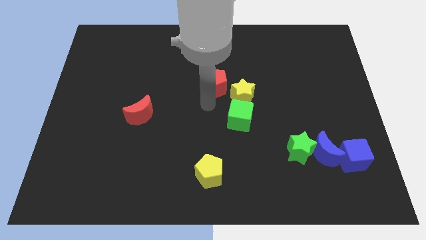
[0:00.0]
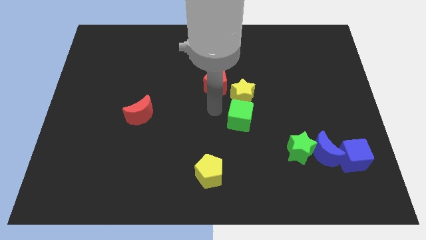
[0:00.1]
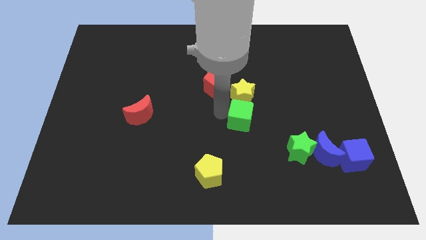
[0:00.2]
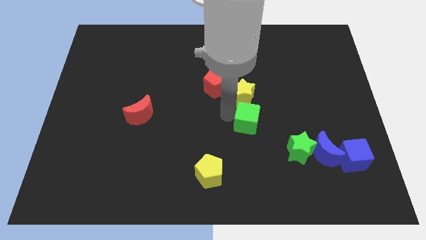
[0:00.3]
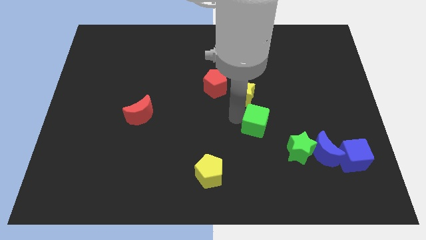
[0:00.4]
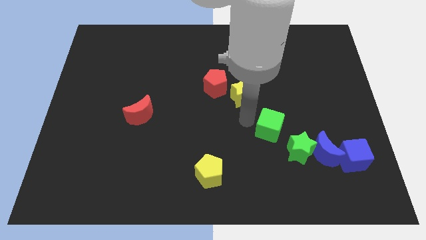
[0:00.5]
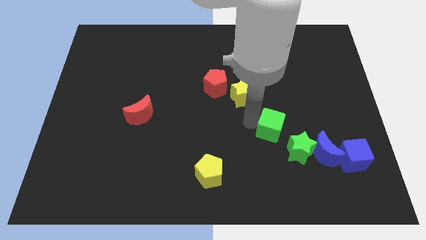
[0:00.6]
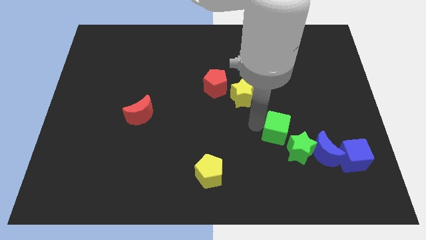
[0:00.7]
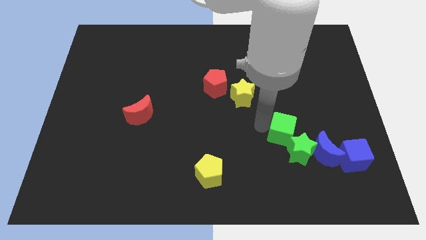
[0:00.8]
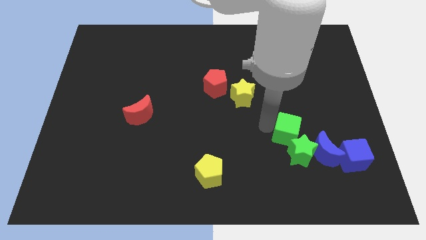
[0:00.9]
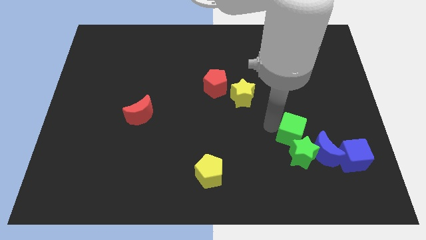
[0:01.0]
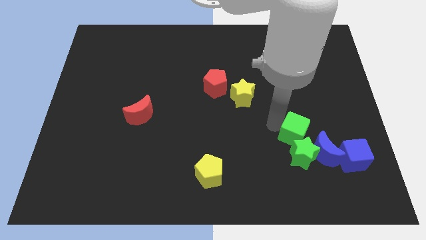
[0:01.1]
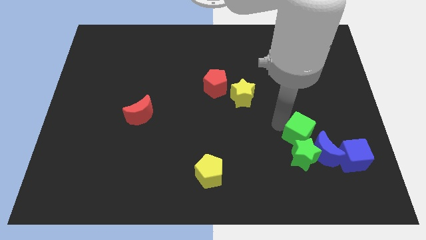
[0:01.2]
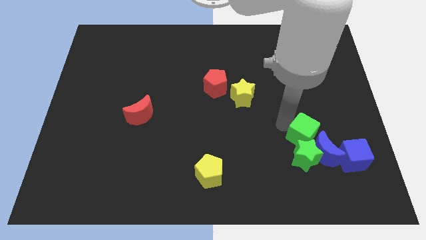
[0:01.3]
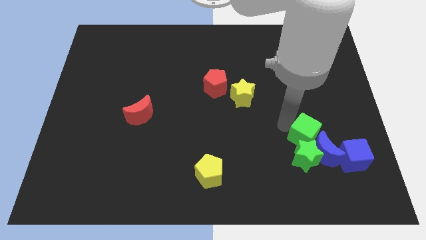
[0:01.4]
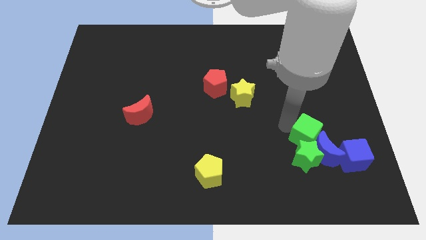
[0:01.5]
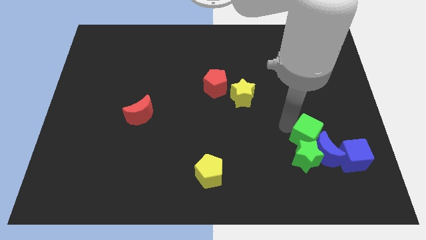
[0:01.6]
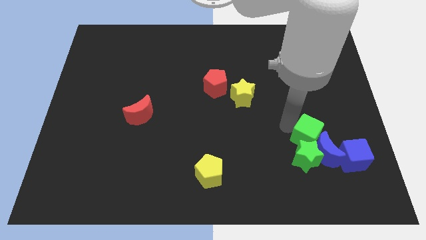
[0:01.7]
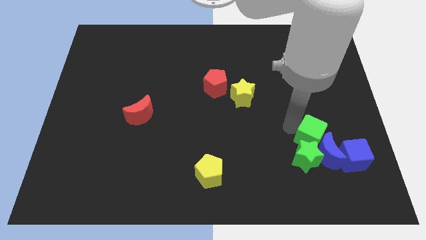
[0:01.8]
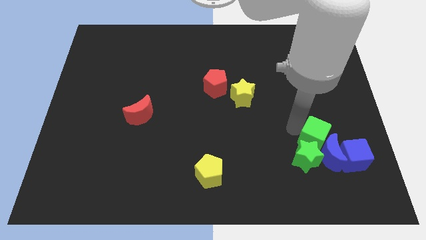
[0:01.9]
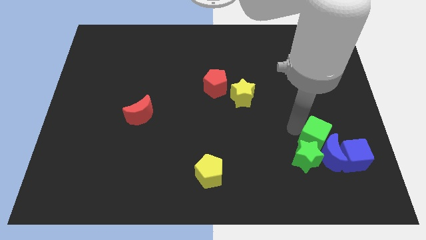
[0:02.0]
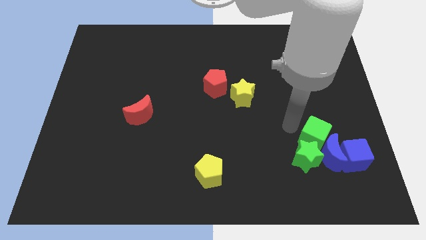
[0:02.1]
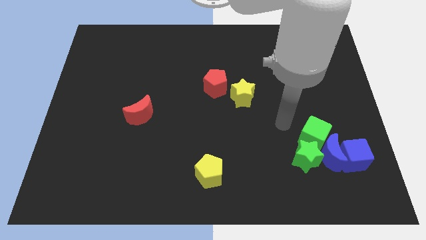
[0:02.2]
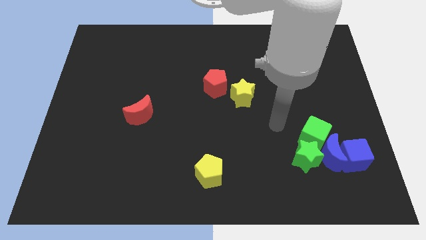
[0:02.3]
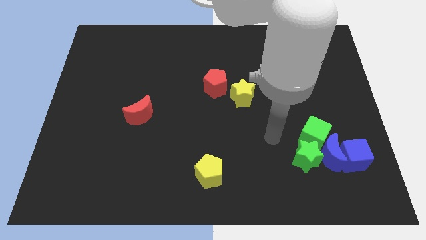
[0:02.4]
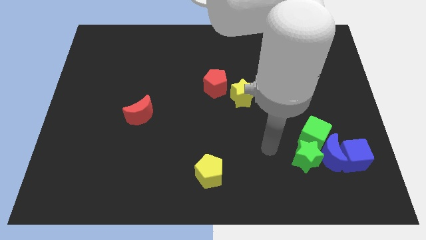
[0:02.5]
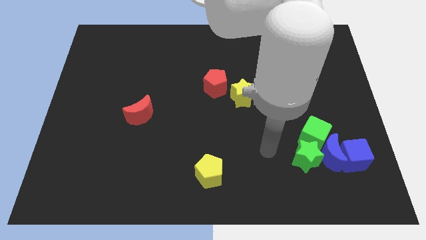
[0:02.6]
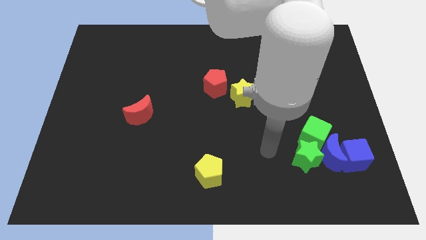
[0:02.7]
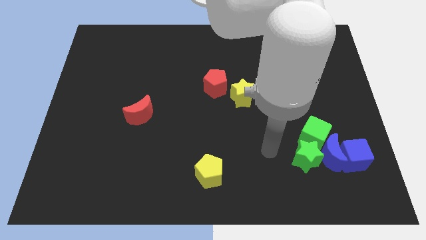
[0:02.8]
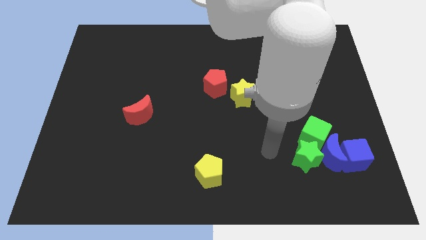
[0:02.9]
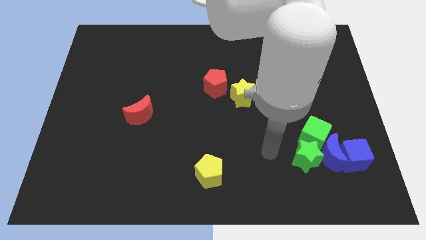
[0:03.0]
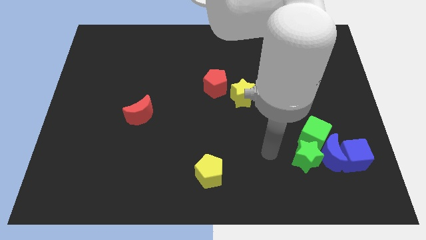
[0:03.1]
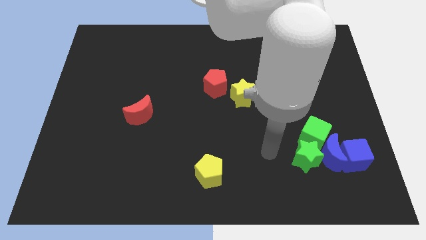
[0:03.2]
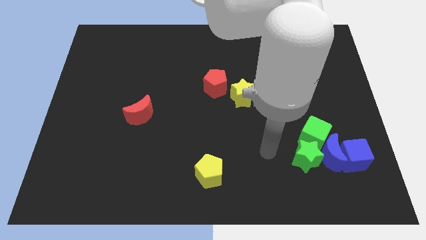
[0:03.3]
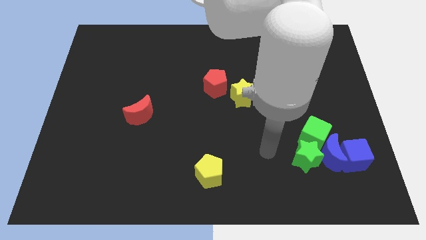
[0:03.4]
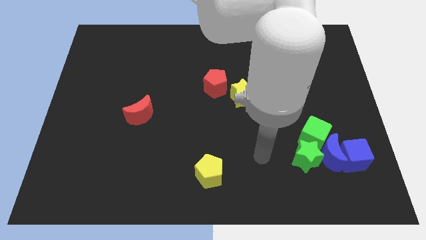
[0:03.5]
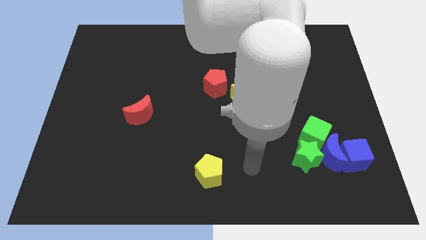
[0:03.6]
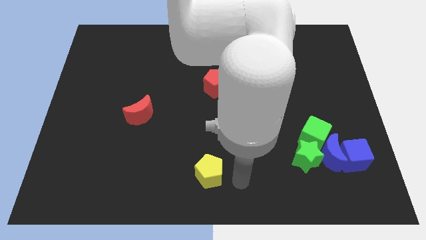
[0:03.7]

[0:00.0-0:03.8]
push a group of blocks to the right side of the board

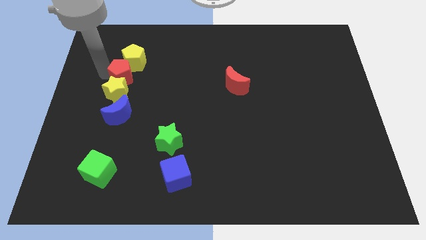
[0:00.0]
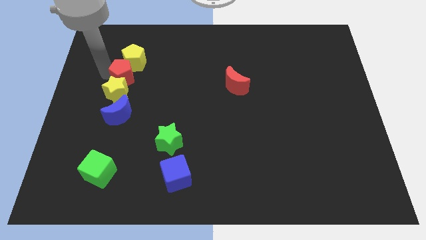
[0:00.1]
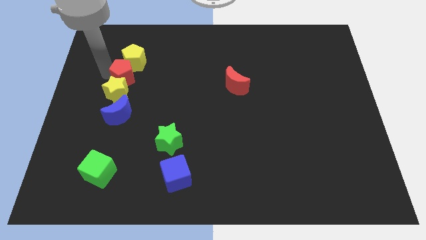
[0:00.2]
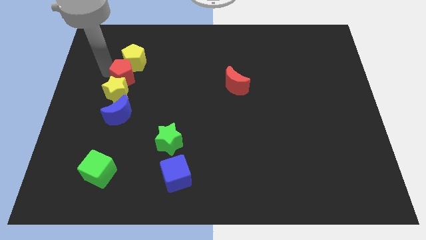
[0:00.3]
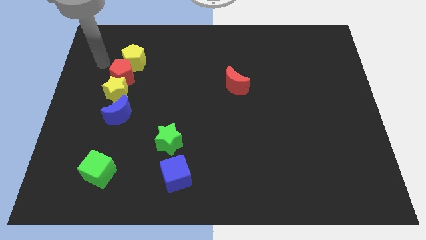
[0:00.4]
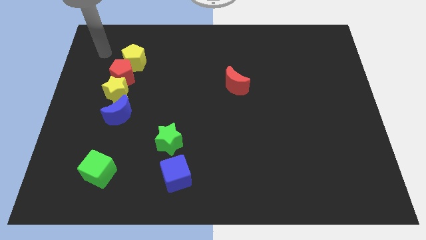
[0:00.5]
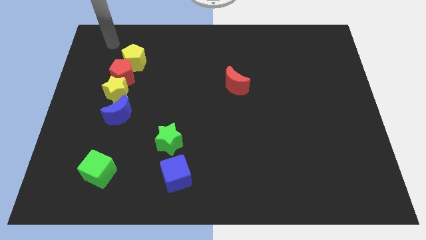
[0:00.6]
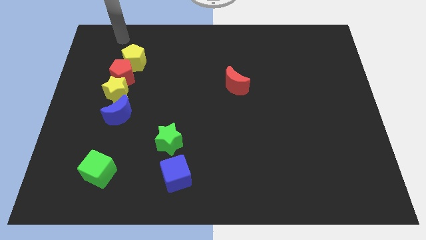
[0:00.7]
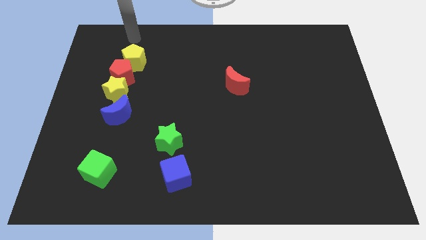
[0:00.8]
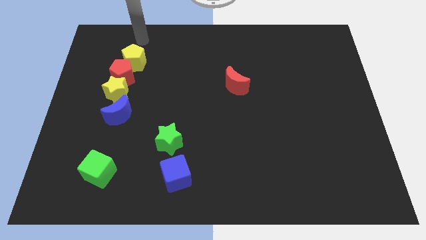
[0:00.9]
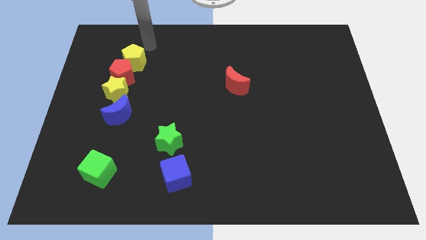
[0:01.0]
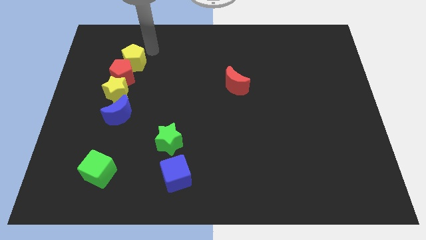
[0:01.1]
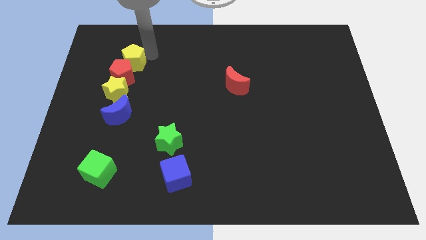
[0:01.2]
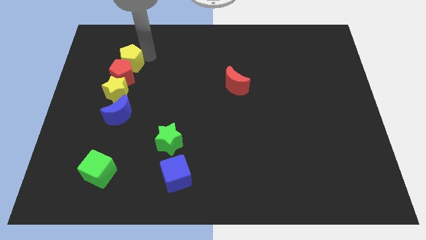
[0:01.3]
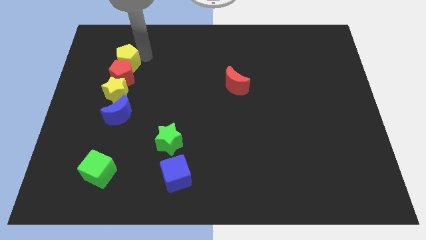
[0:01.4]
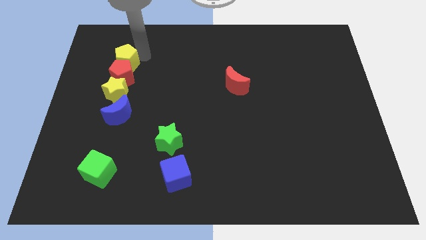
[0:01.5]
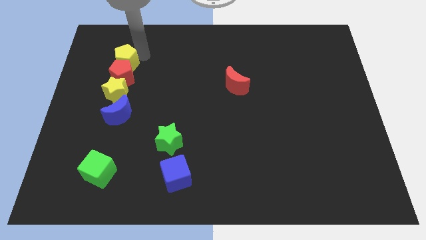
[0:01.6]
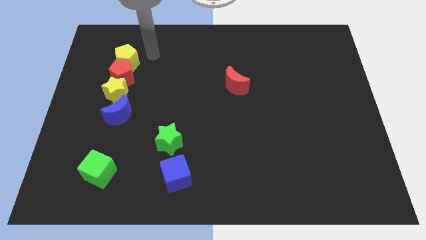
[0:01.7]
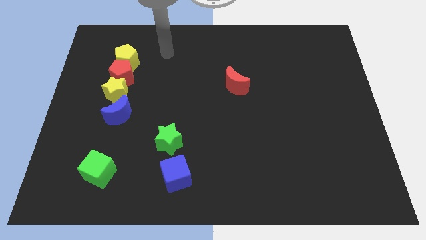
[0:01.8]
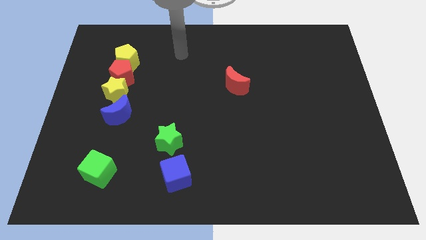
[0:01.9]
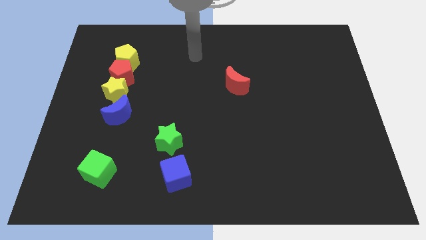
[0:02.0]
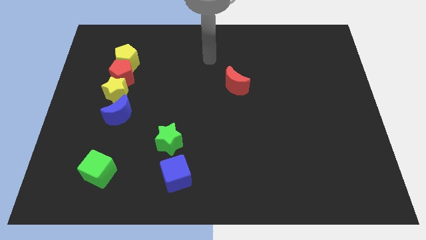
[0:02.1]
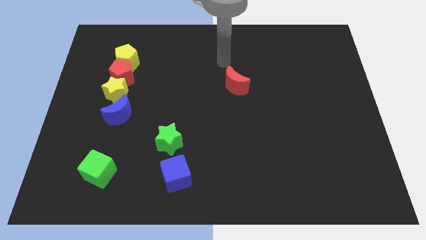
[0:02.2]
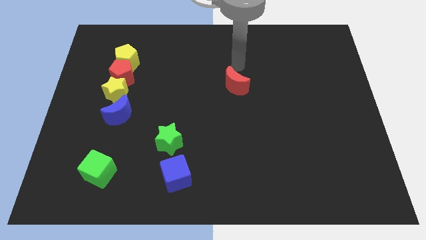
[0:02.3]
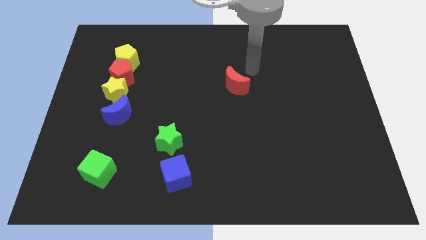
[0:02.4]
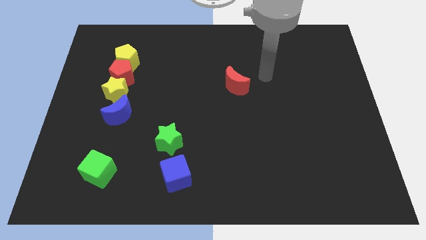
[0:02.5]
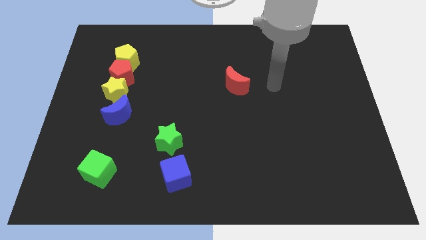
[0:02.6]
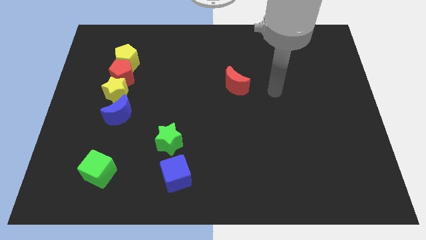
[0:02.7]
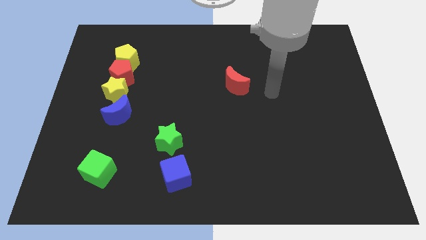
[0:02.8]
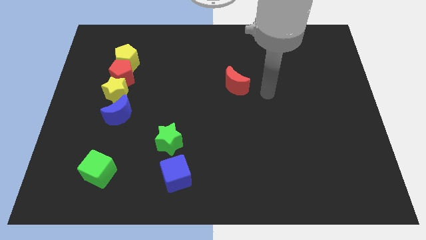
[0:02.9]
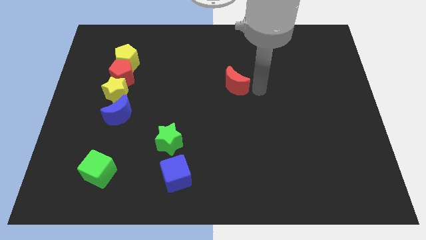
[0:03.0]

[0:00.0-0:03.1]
move your arm to the bottom right of the red crescent

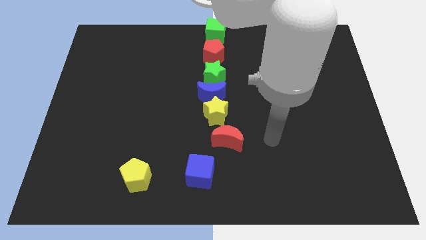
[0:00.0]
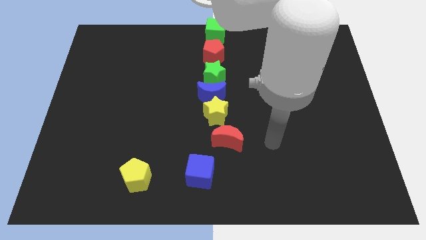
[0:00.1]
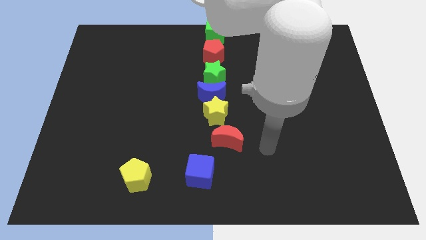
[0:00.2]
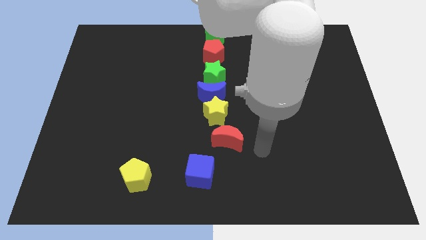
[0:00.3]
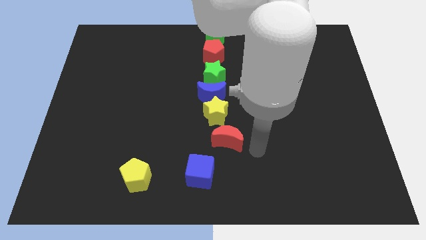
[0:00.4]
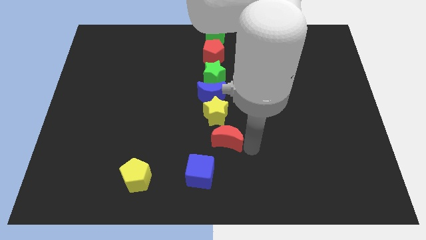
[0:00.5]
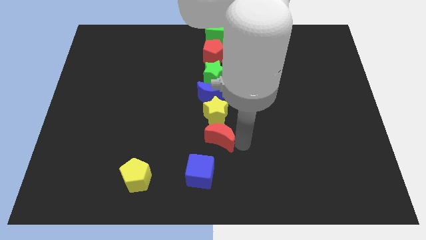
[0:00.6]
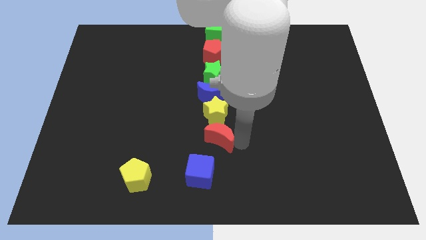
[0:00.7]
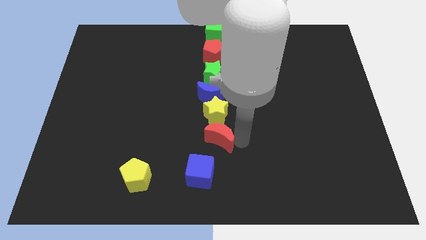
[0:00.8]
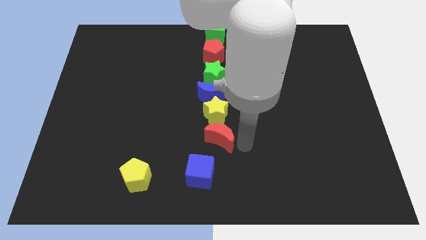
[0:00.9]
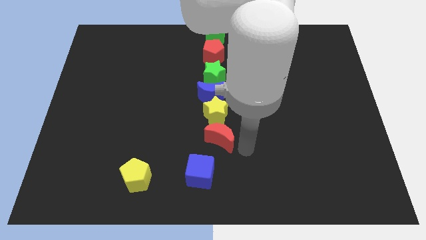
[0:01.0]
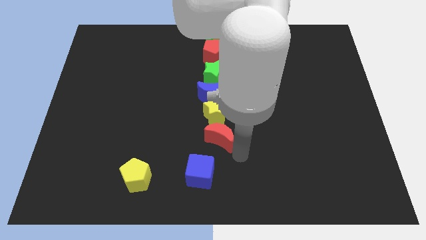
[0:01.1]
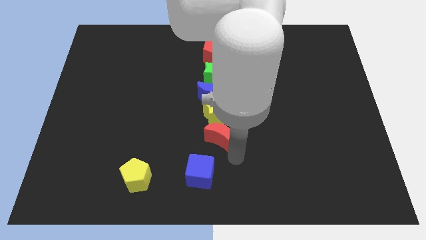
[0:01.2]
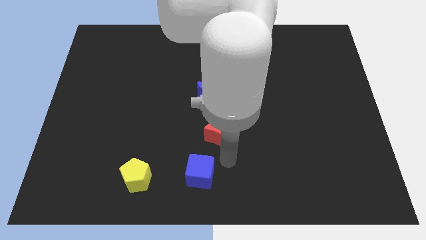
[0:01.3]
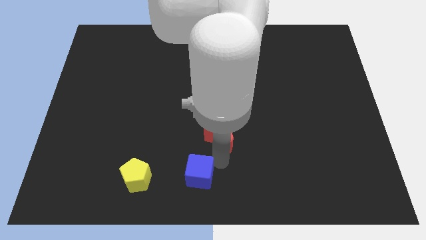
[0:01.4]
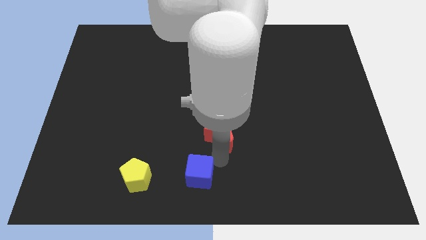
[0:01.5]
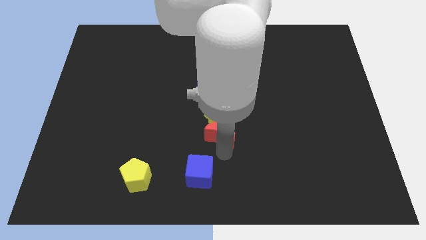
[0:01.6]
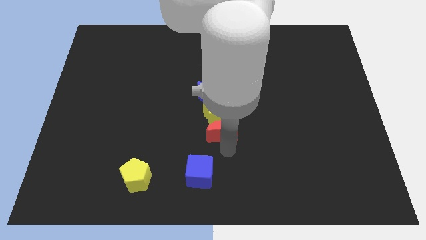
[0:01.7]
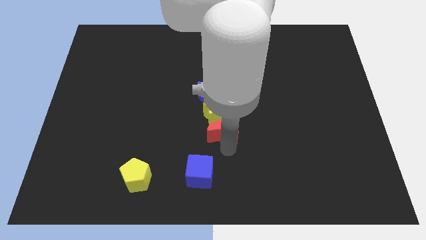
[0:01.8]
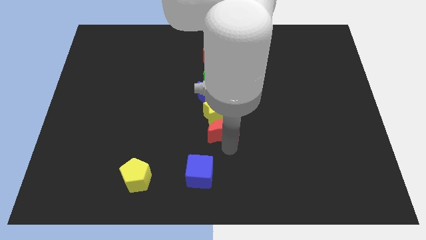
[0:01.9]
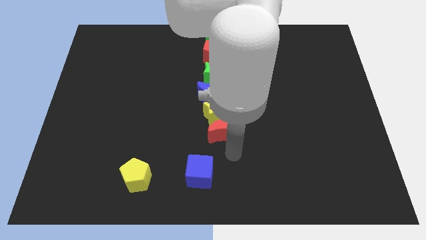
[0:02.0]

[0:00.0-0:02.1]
slide red moon below yellow star
